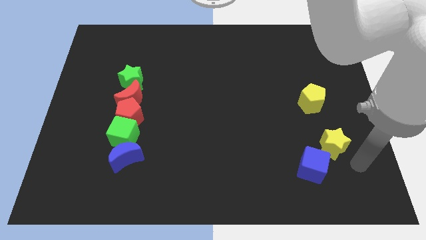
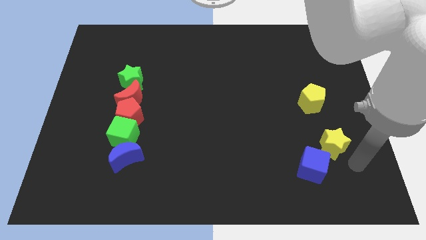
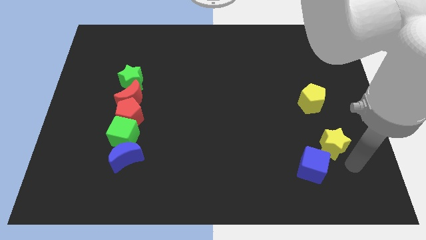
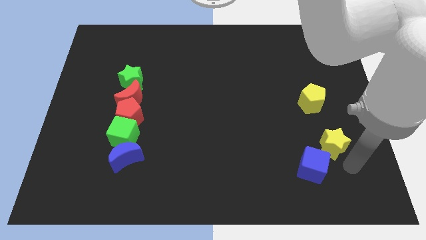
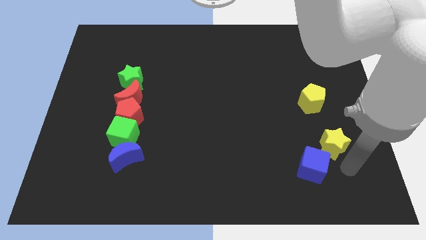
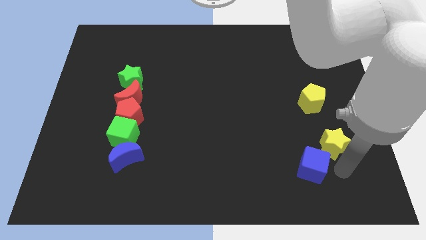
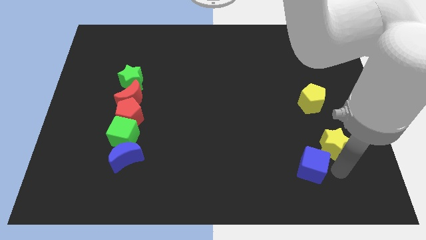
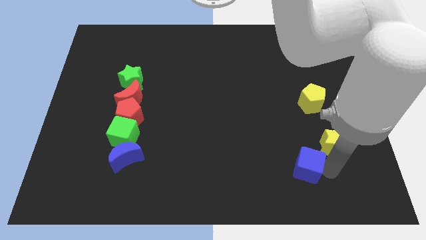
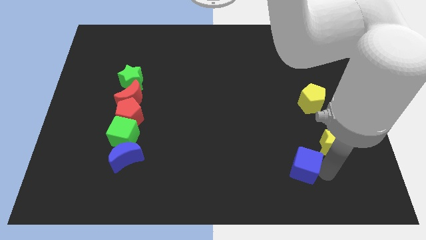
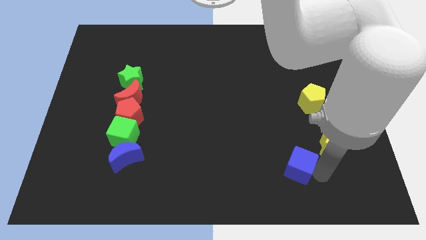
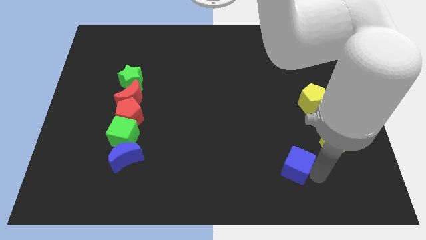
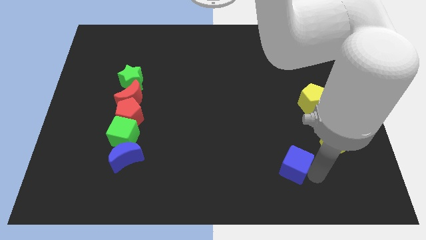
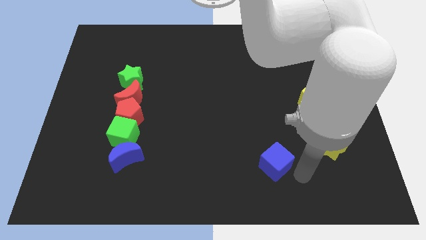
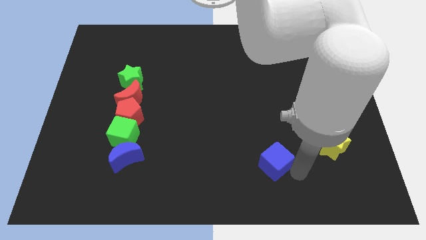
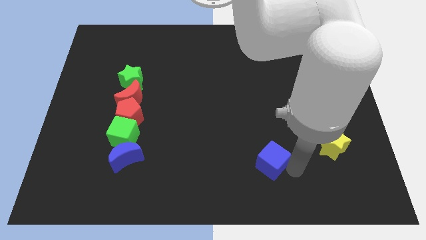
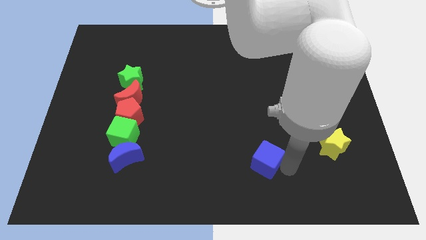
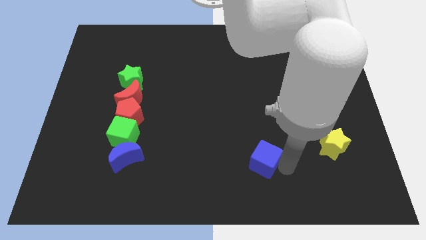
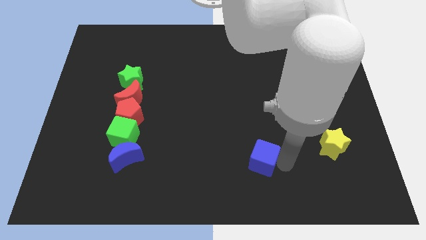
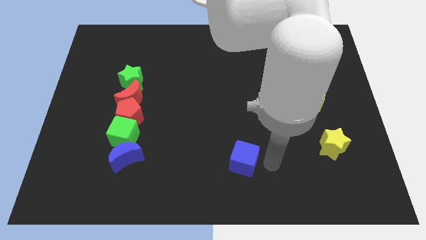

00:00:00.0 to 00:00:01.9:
push the blue cube slightly to the left

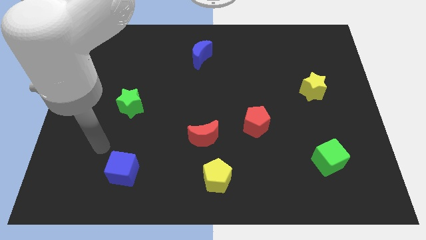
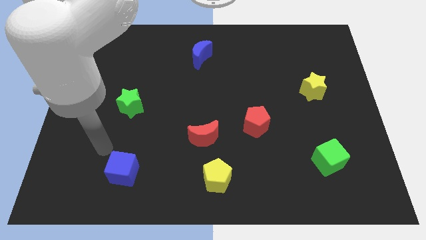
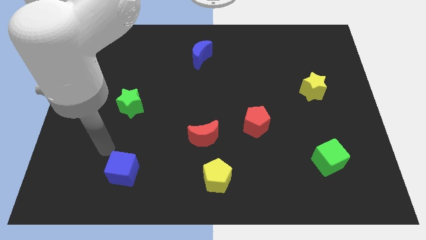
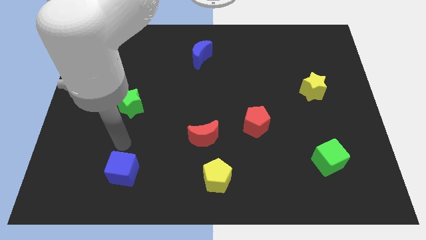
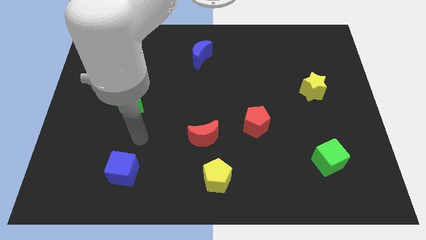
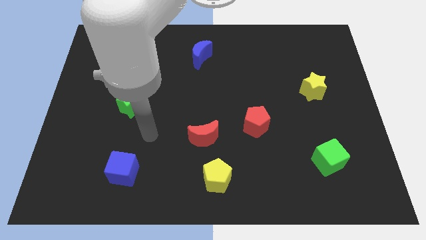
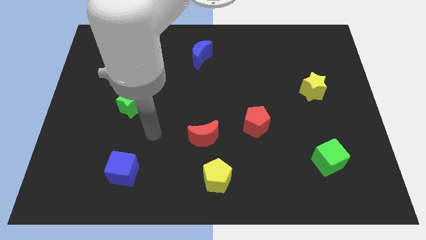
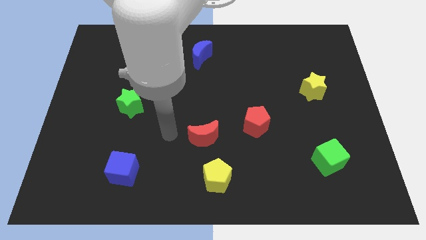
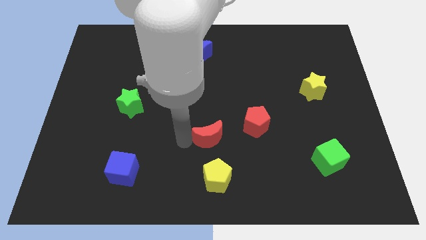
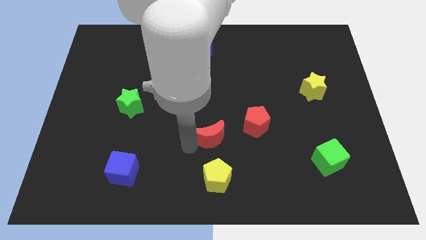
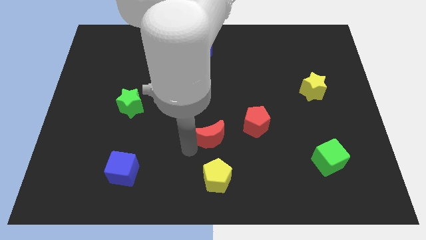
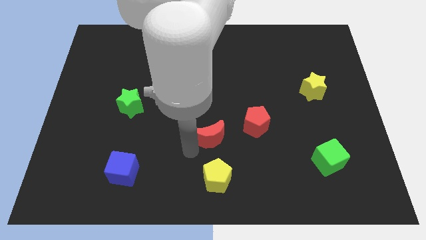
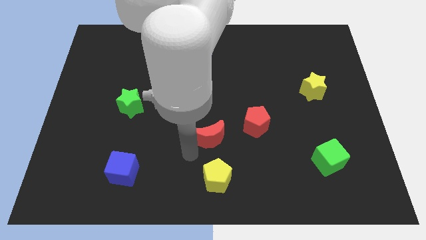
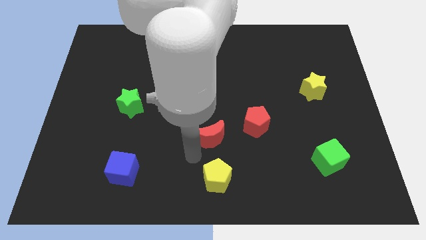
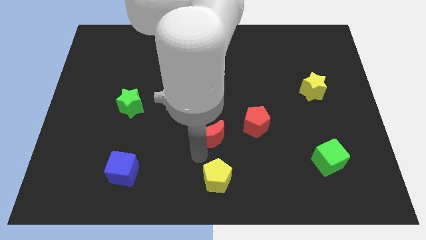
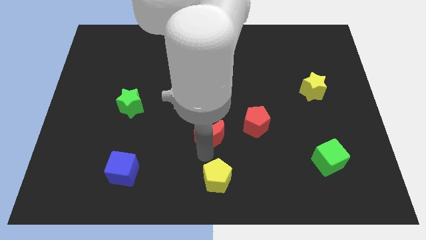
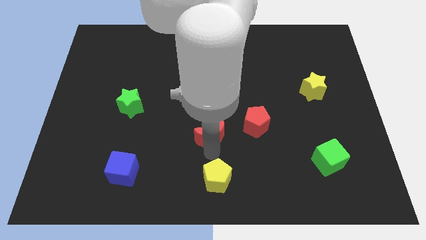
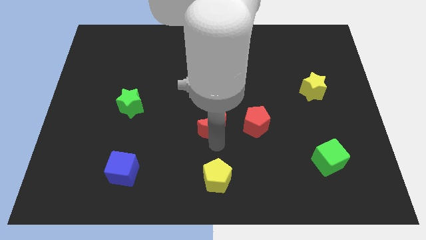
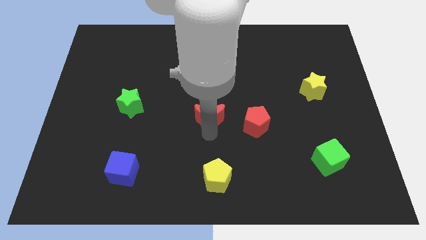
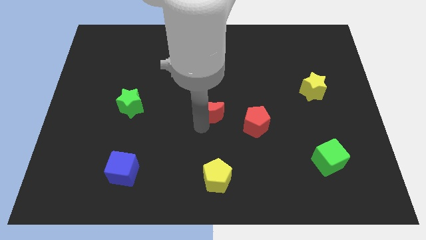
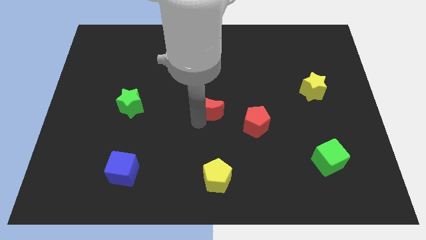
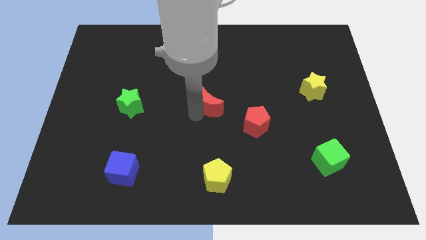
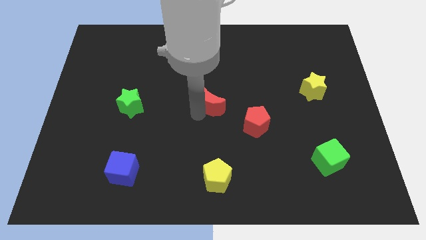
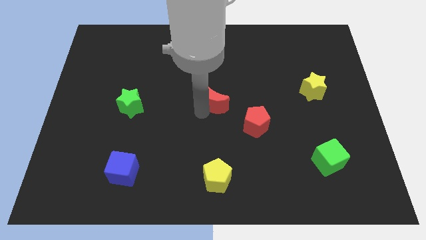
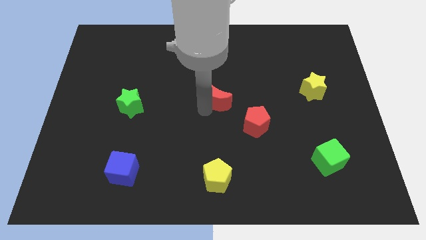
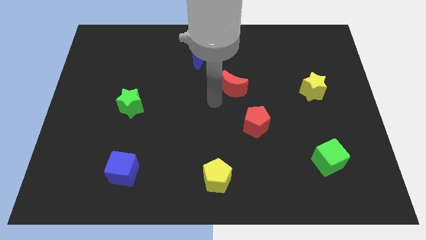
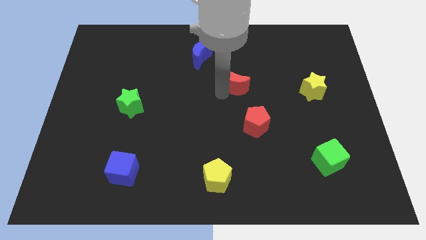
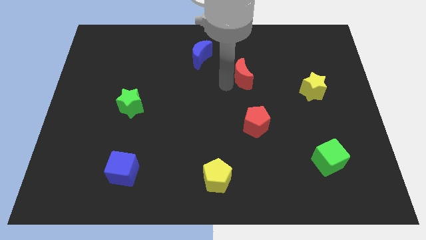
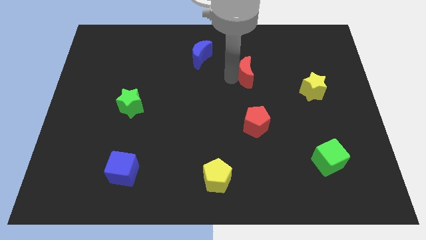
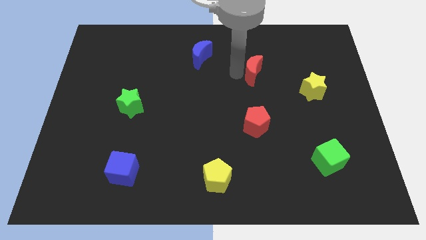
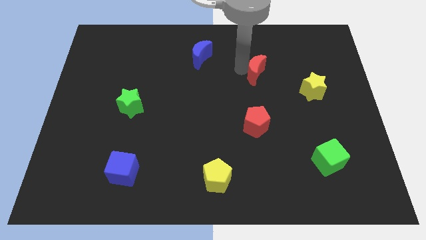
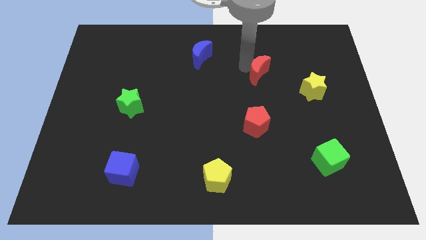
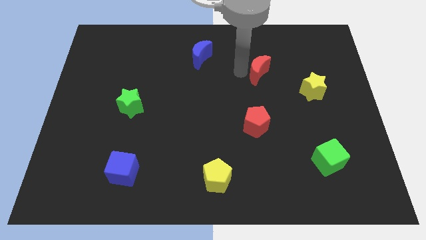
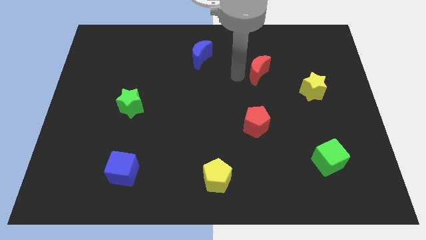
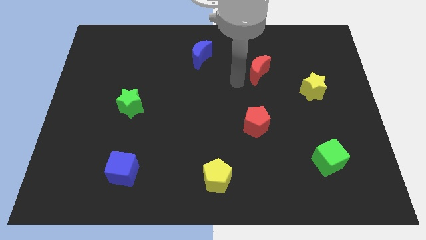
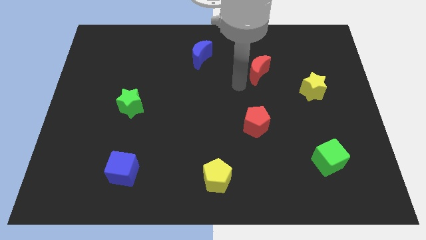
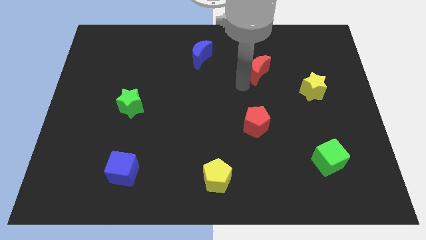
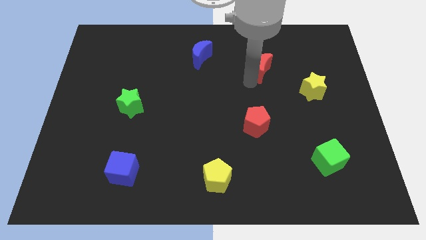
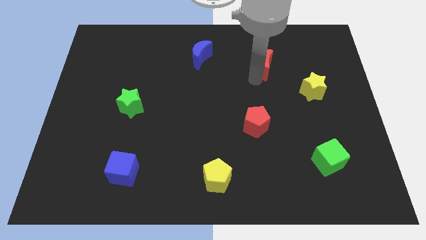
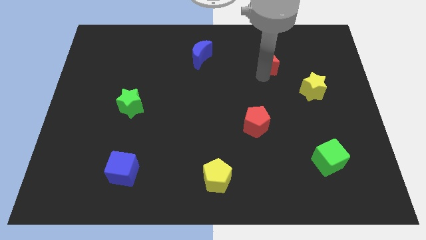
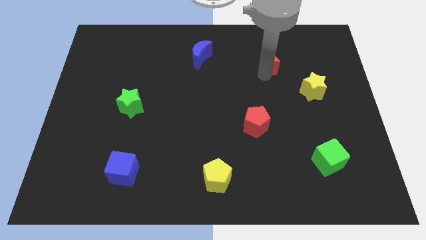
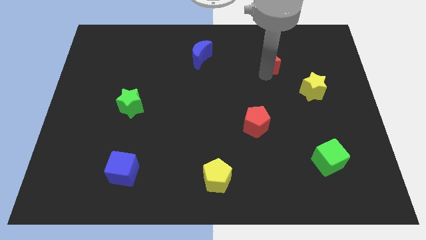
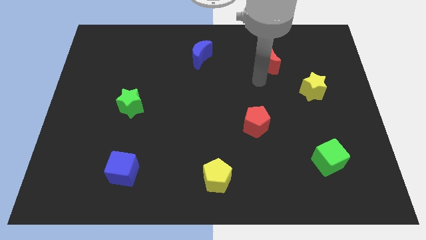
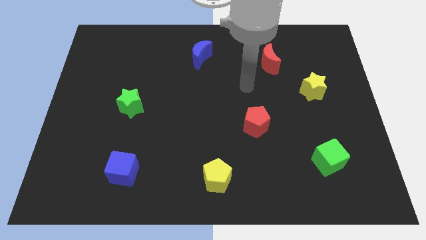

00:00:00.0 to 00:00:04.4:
move the red moon diagonally top left to the yellow star

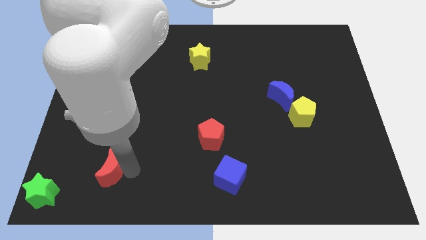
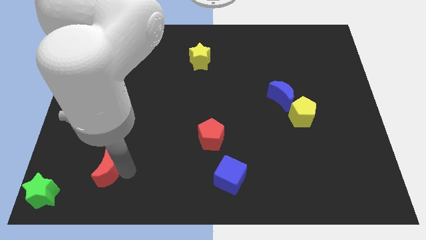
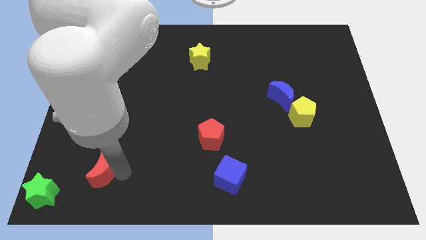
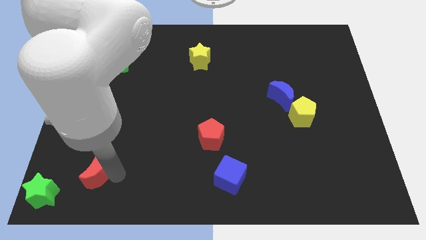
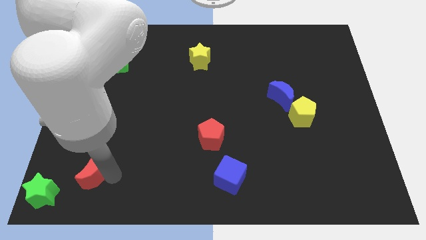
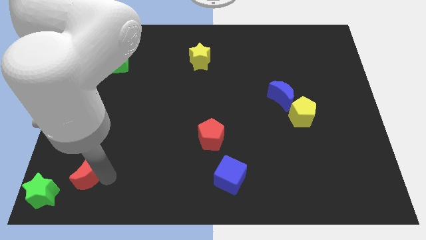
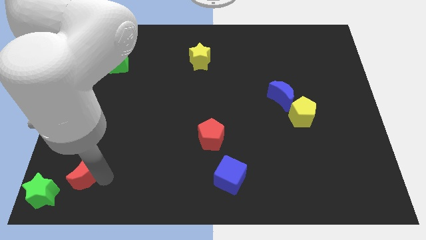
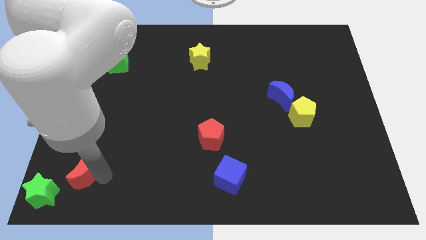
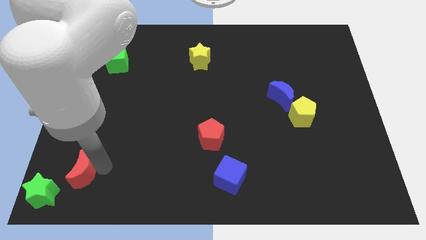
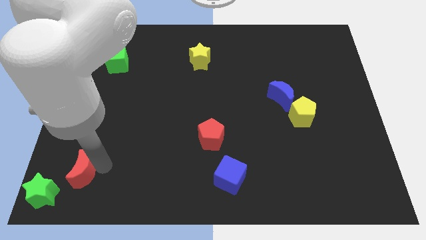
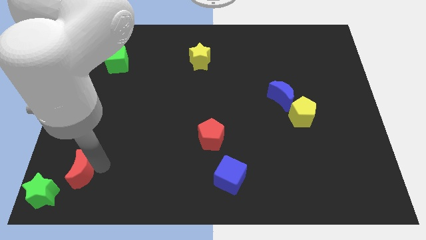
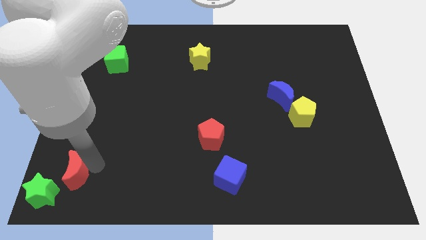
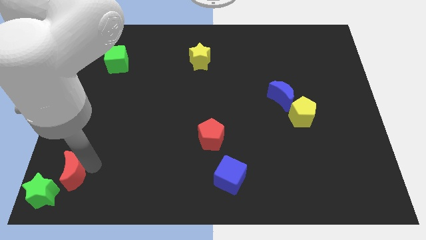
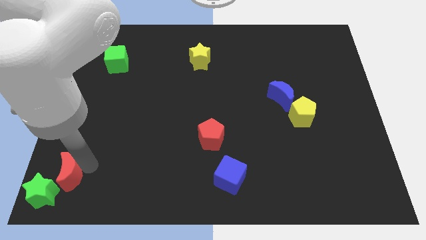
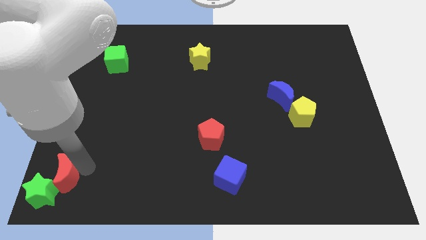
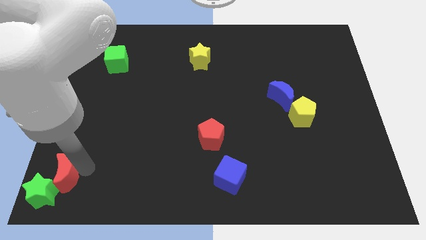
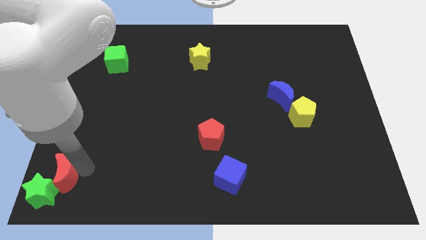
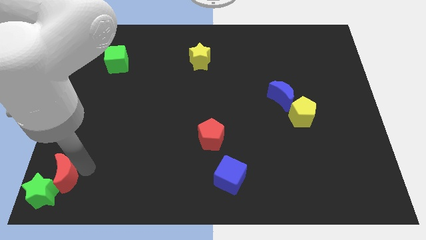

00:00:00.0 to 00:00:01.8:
move red moon close to the green star

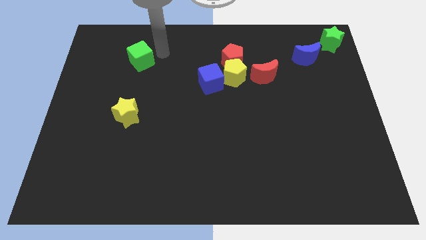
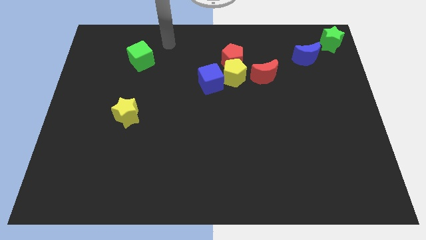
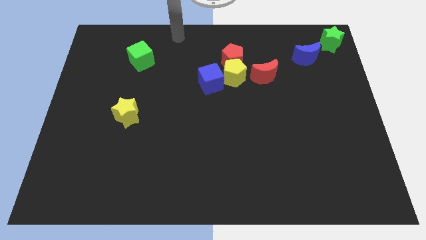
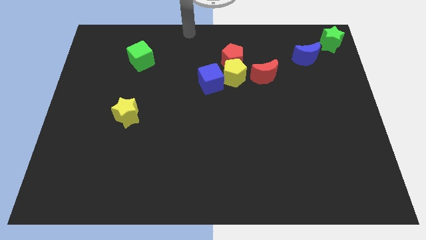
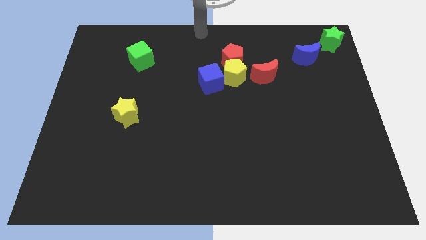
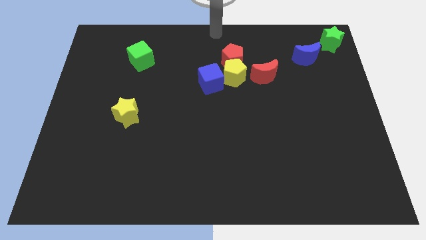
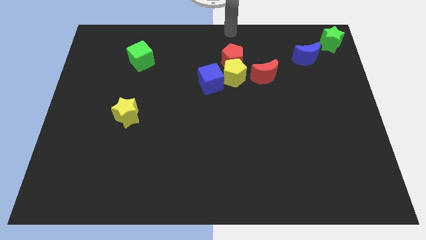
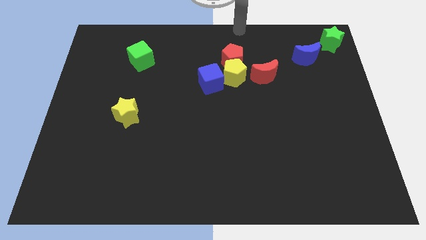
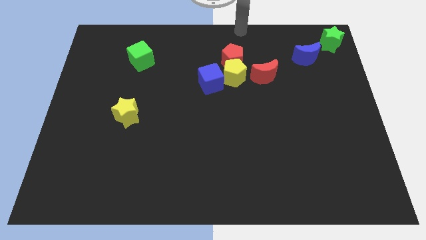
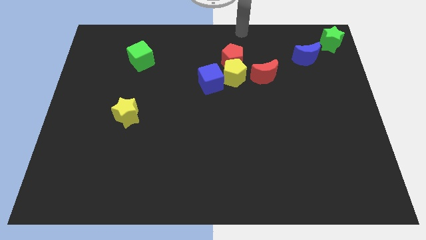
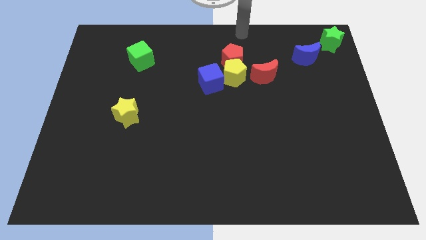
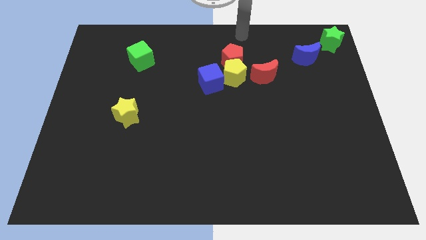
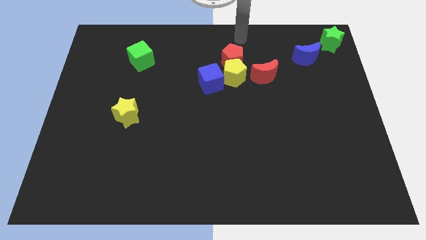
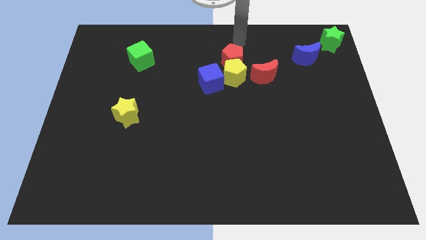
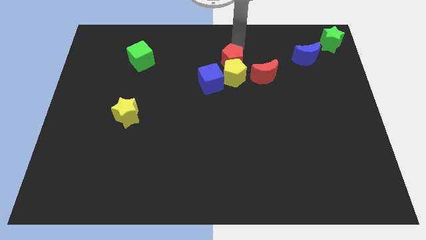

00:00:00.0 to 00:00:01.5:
move the arm above the red pentagon
